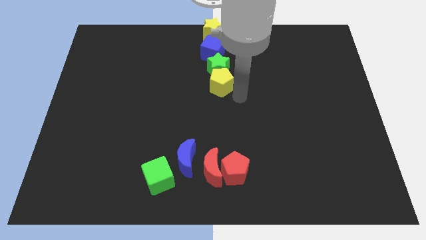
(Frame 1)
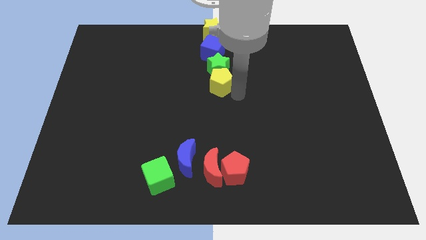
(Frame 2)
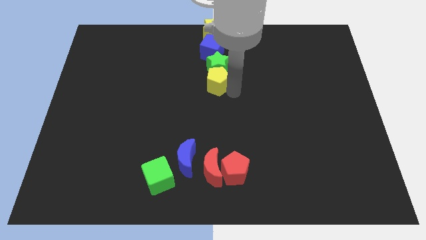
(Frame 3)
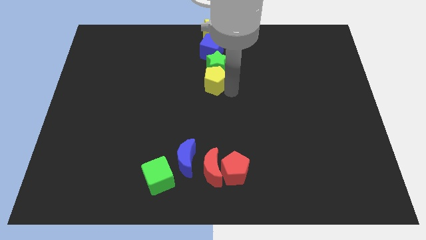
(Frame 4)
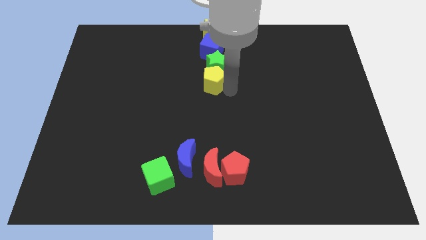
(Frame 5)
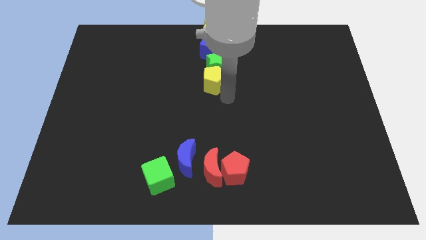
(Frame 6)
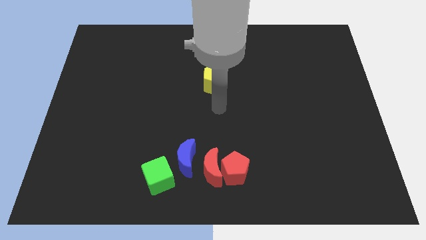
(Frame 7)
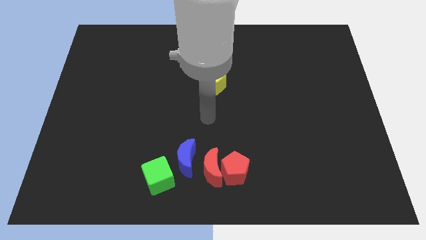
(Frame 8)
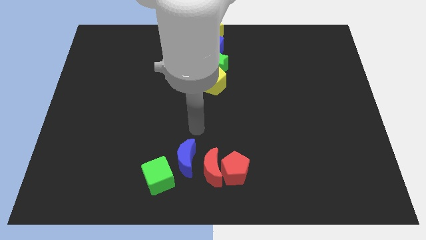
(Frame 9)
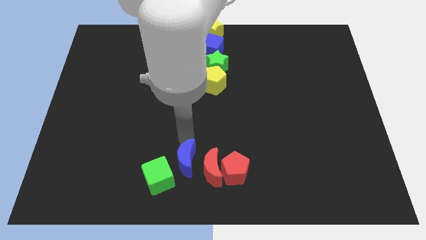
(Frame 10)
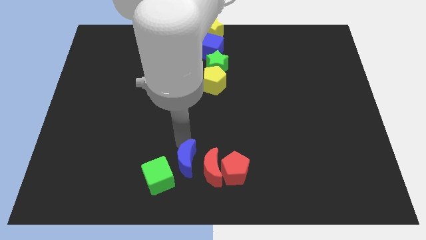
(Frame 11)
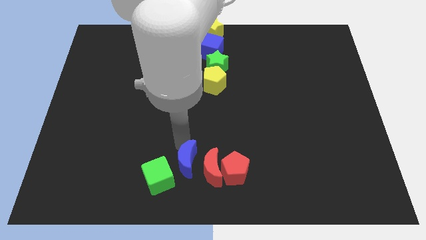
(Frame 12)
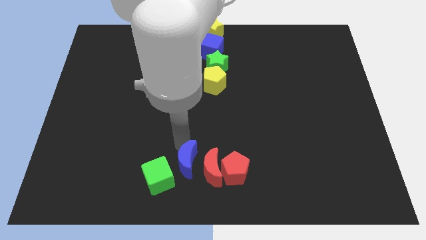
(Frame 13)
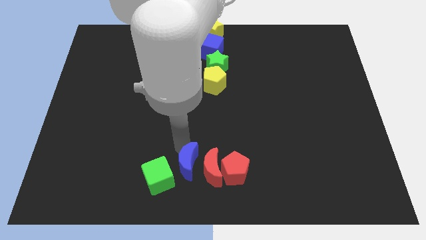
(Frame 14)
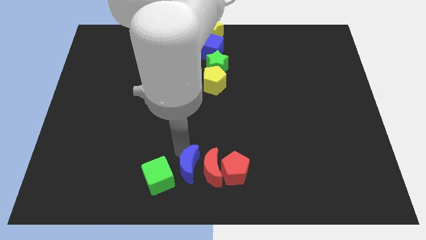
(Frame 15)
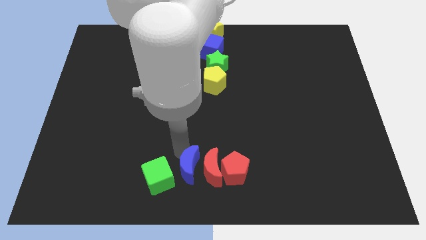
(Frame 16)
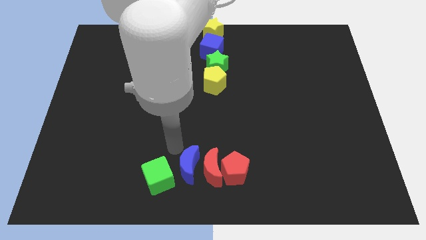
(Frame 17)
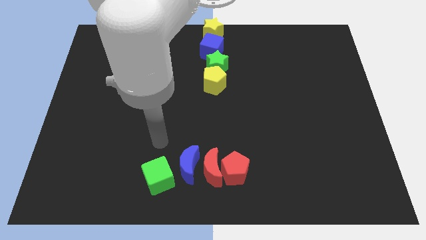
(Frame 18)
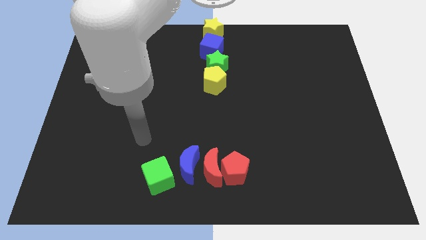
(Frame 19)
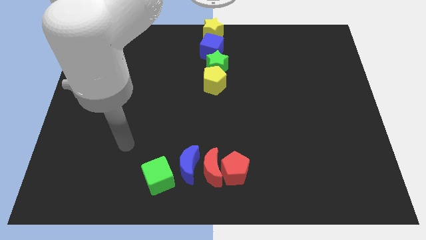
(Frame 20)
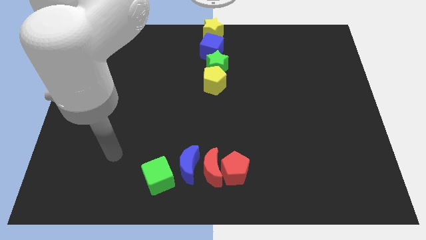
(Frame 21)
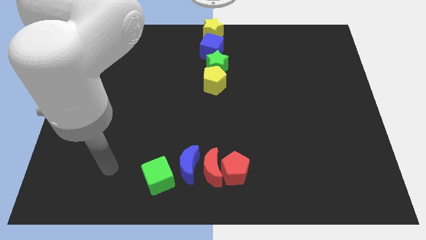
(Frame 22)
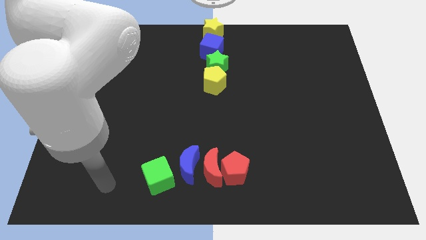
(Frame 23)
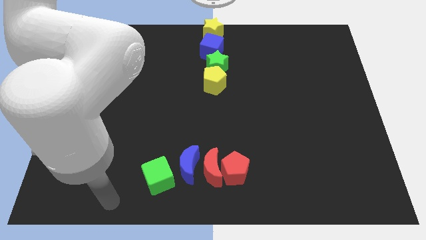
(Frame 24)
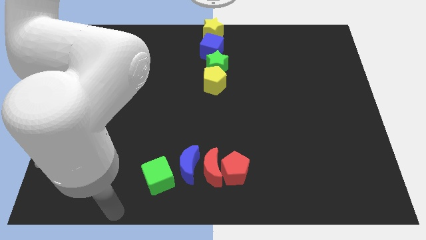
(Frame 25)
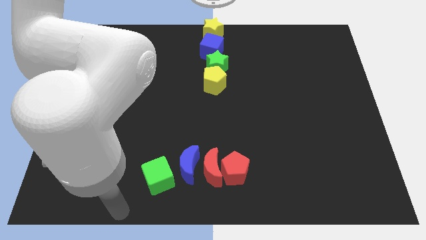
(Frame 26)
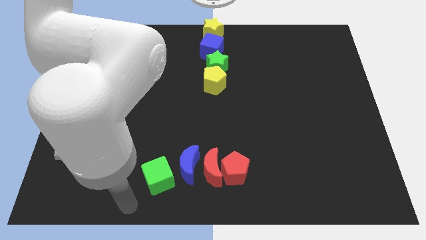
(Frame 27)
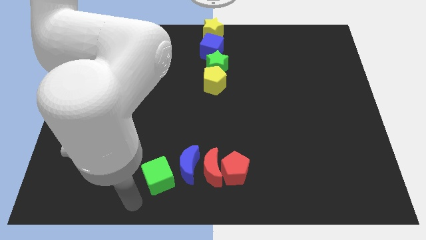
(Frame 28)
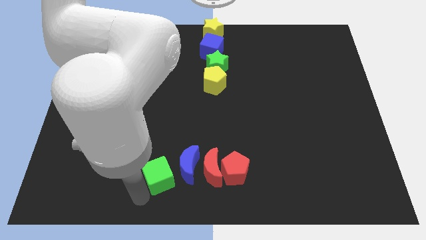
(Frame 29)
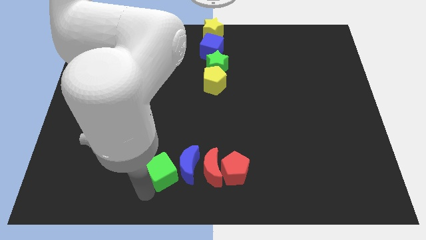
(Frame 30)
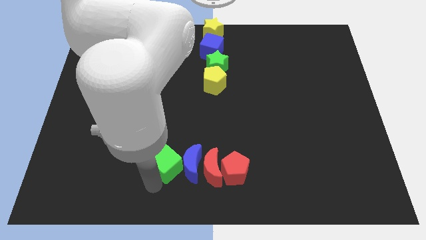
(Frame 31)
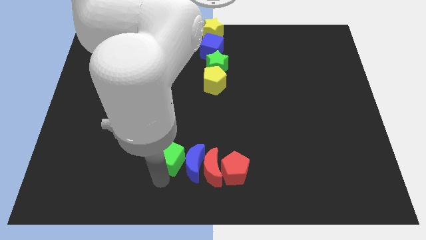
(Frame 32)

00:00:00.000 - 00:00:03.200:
place the blue moon parallel right to the green cube

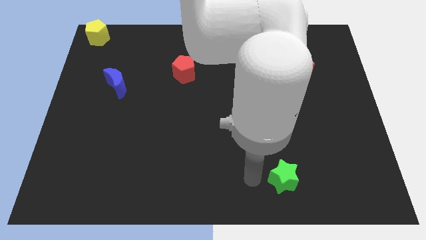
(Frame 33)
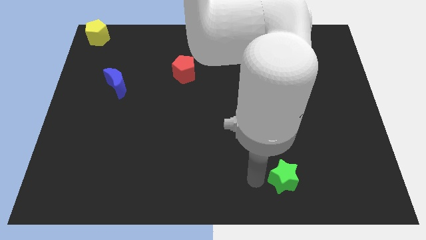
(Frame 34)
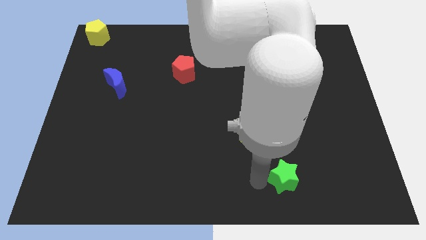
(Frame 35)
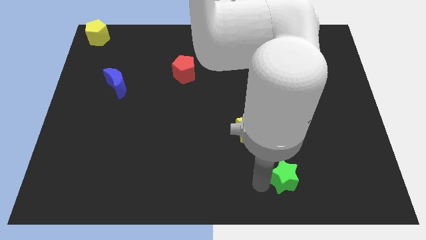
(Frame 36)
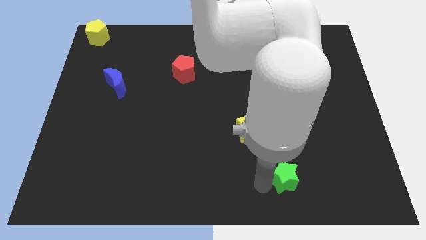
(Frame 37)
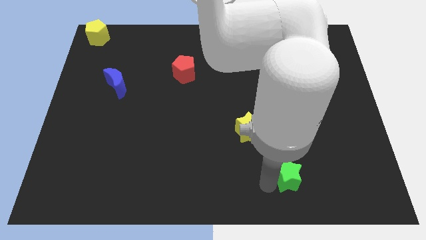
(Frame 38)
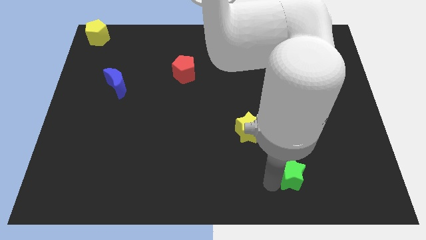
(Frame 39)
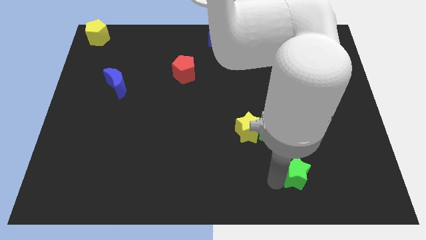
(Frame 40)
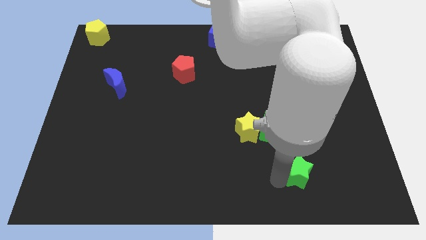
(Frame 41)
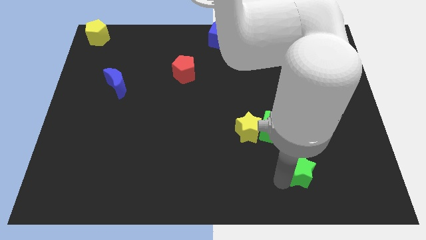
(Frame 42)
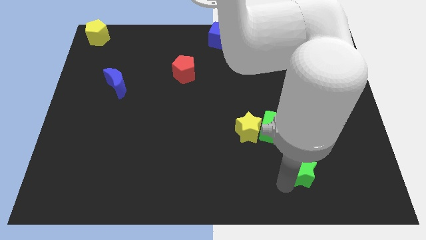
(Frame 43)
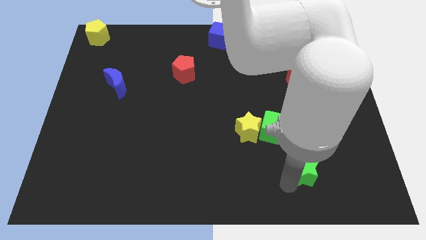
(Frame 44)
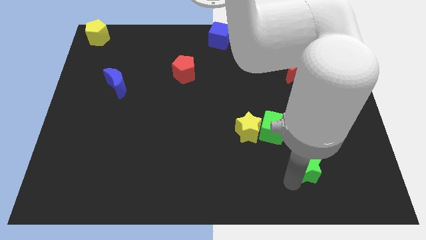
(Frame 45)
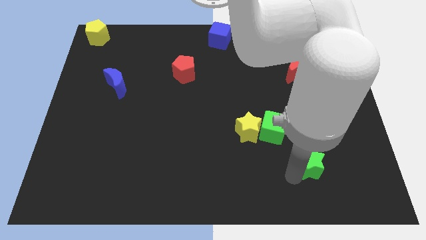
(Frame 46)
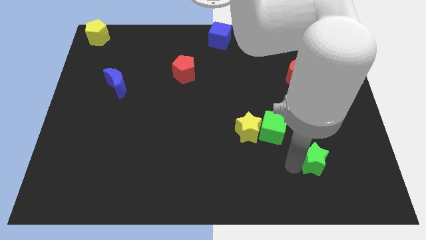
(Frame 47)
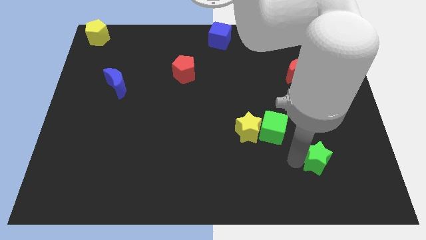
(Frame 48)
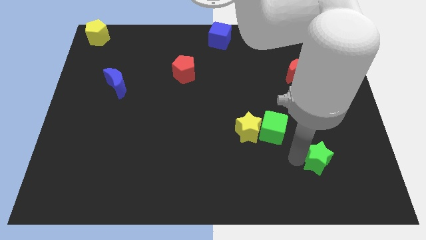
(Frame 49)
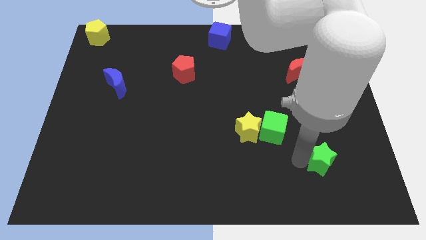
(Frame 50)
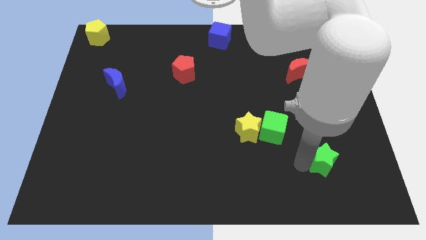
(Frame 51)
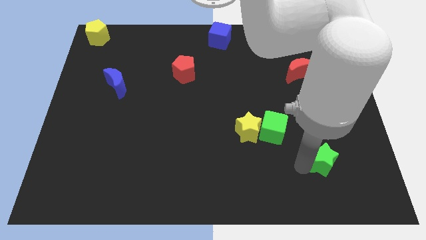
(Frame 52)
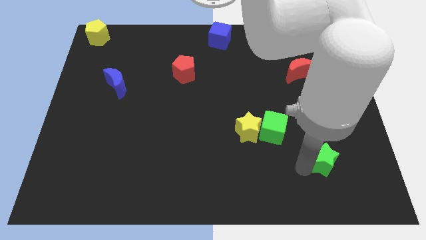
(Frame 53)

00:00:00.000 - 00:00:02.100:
move the green star towards the right side

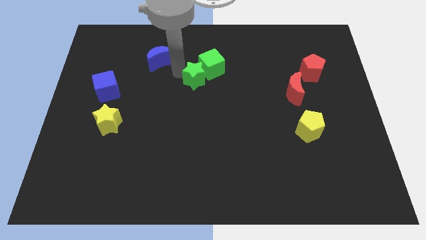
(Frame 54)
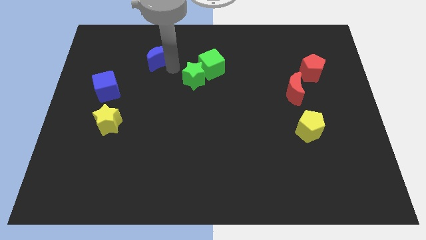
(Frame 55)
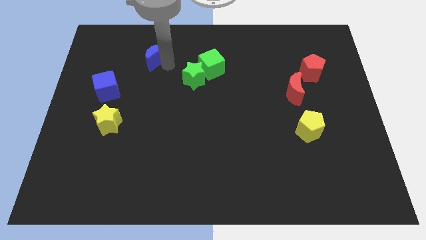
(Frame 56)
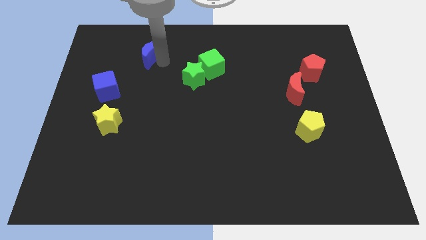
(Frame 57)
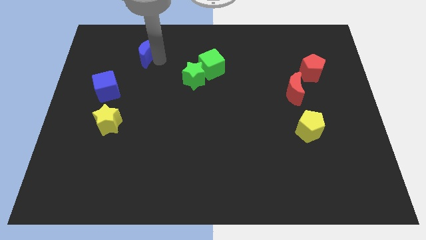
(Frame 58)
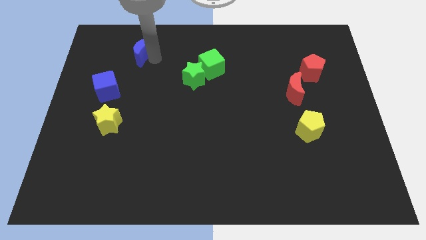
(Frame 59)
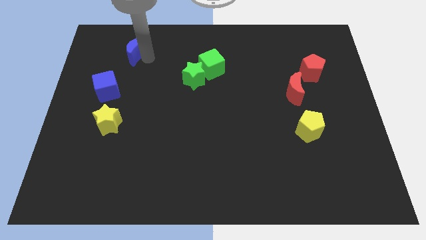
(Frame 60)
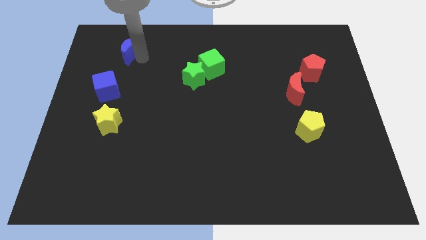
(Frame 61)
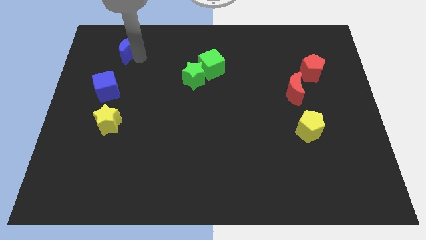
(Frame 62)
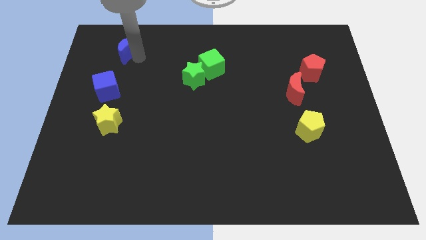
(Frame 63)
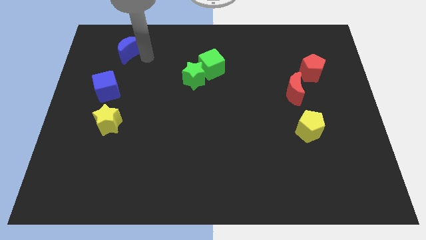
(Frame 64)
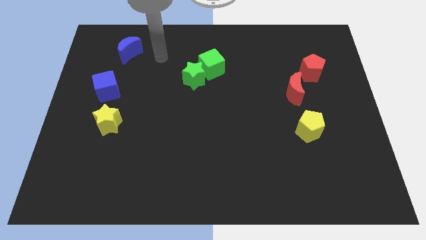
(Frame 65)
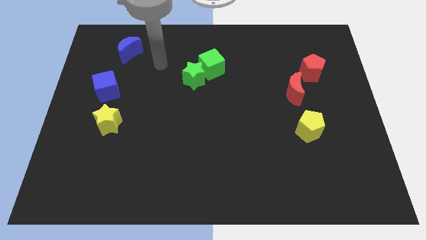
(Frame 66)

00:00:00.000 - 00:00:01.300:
push the blue crescent slightly to the left

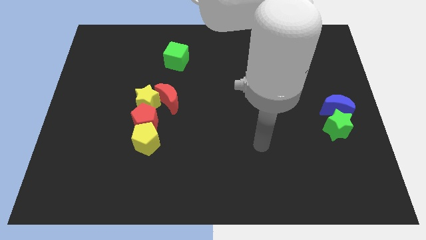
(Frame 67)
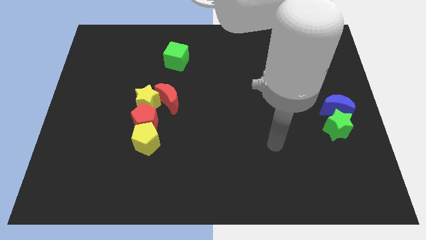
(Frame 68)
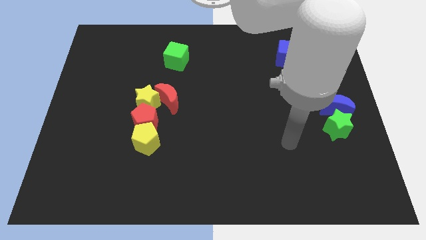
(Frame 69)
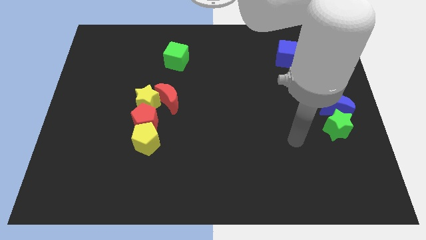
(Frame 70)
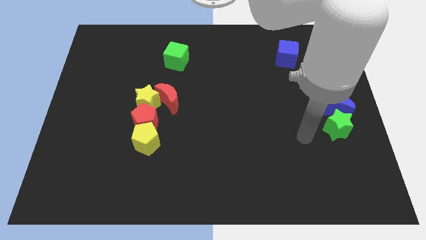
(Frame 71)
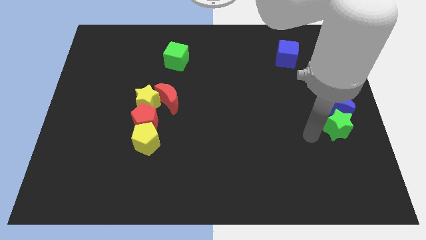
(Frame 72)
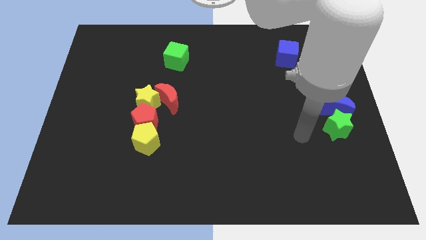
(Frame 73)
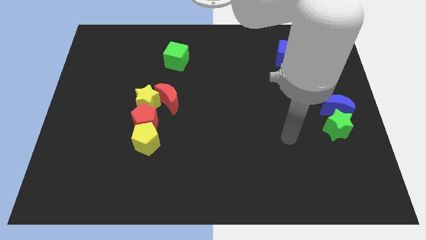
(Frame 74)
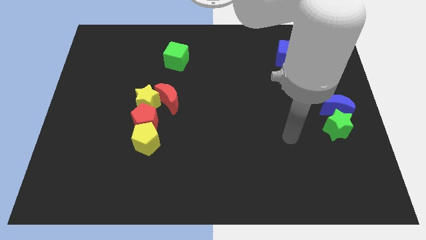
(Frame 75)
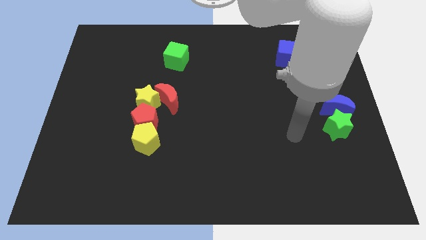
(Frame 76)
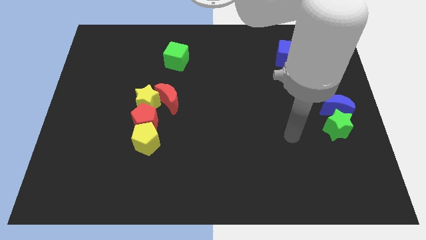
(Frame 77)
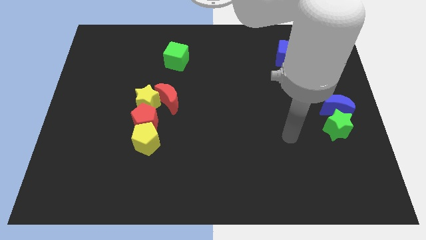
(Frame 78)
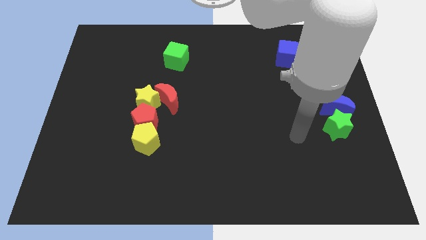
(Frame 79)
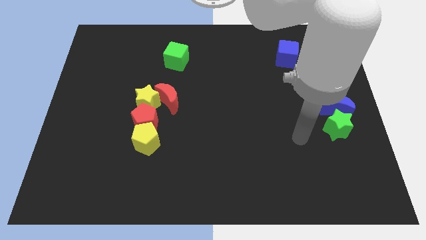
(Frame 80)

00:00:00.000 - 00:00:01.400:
move the arm towards the left of the green star

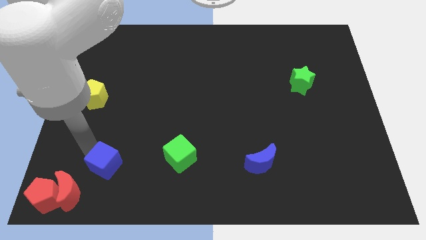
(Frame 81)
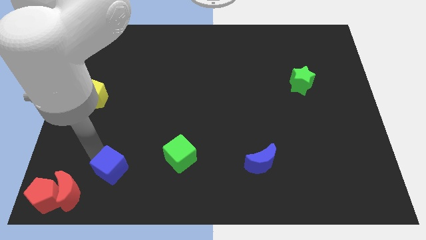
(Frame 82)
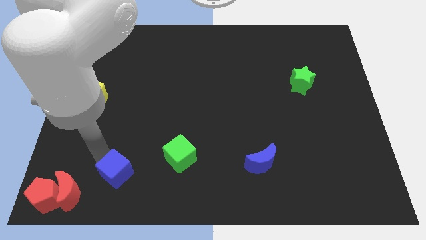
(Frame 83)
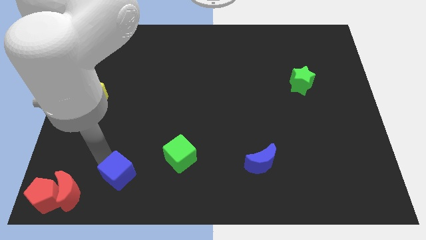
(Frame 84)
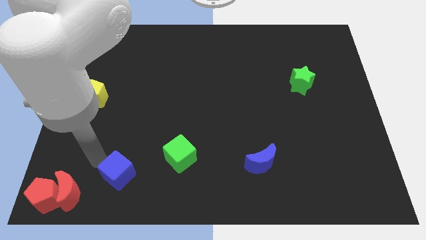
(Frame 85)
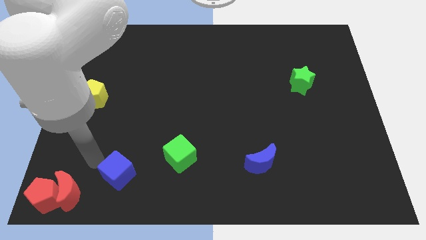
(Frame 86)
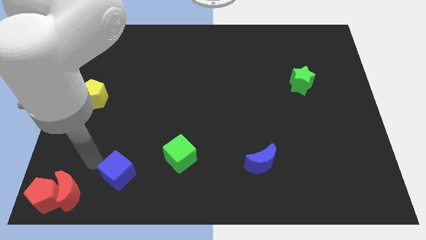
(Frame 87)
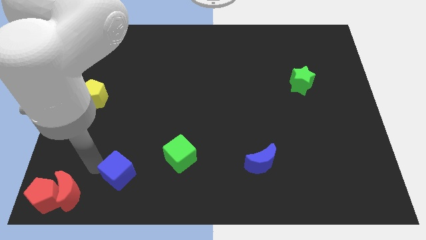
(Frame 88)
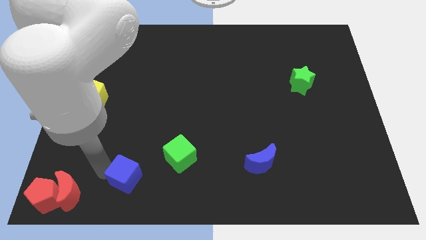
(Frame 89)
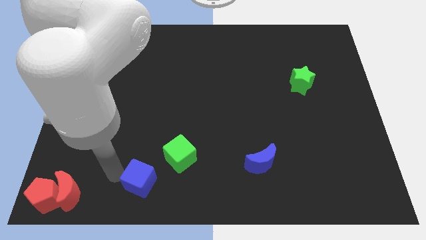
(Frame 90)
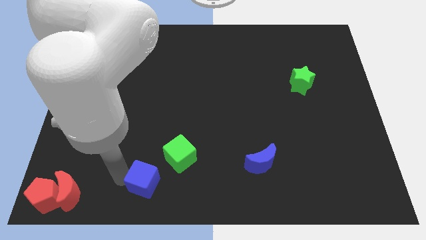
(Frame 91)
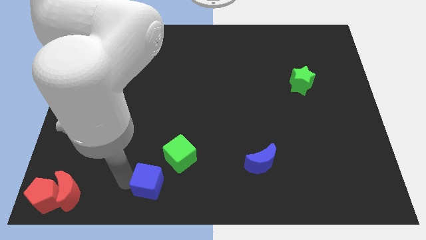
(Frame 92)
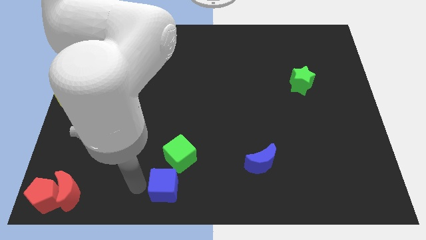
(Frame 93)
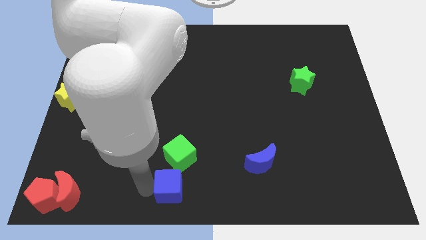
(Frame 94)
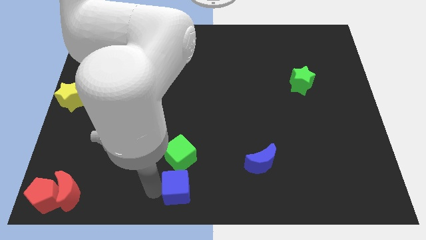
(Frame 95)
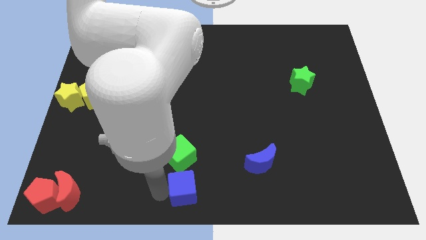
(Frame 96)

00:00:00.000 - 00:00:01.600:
put the blue cube to the bottom side of the green cube
